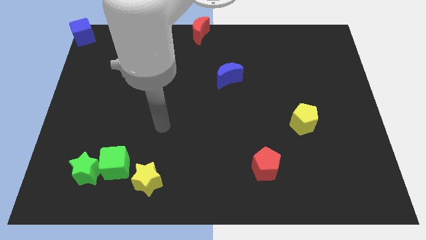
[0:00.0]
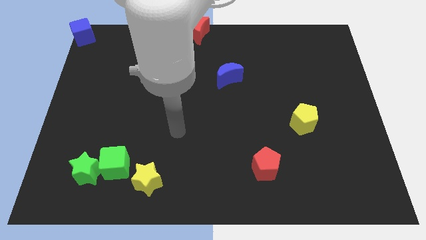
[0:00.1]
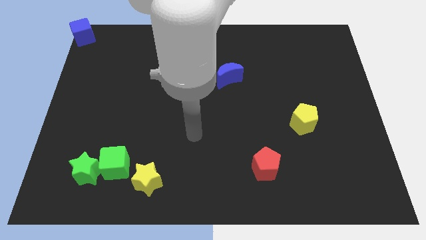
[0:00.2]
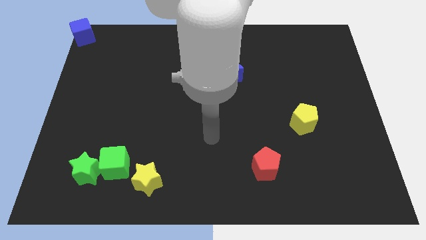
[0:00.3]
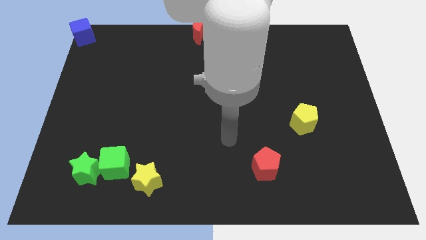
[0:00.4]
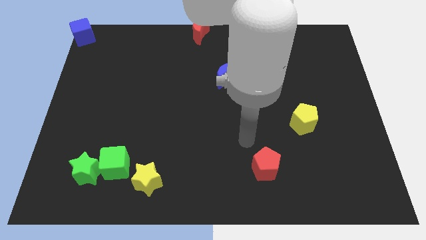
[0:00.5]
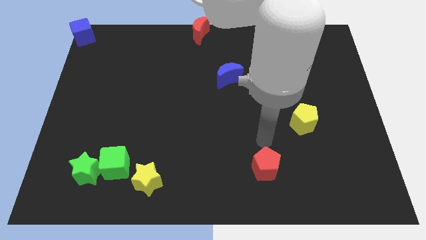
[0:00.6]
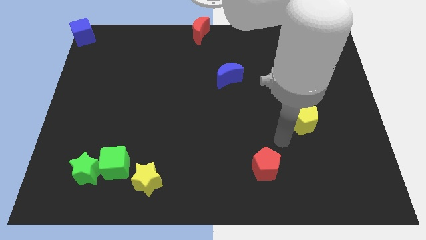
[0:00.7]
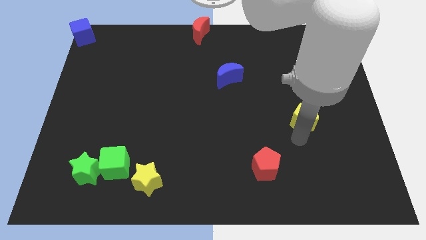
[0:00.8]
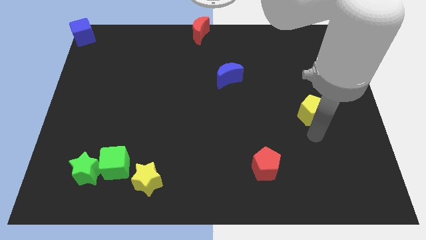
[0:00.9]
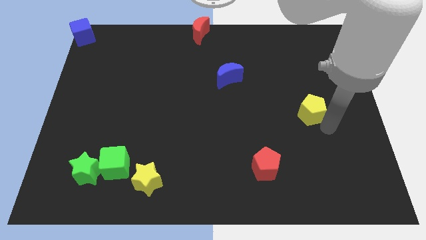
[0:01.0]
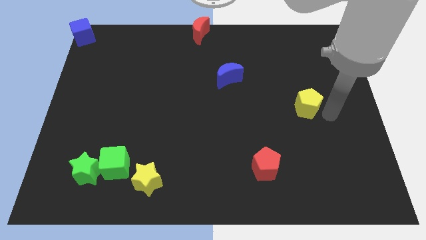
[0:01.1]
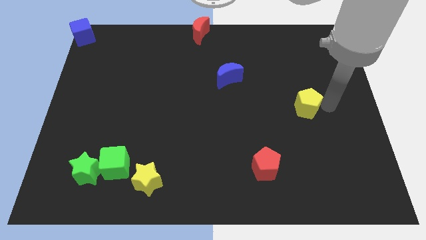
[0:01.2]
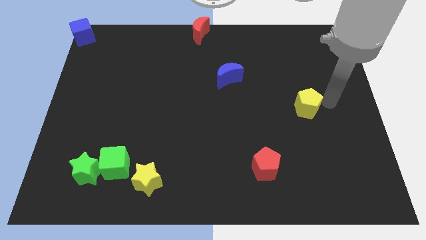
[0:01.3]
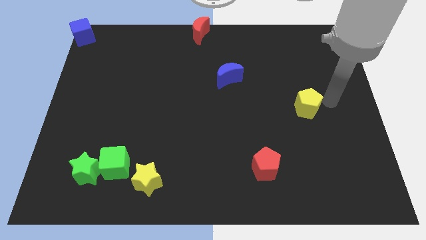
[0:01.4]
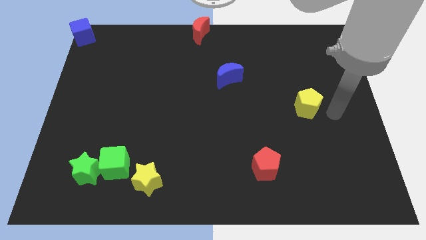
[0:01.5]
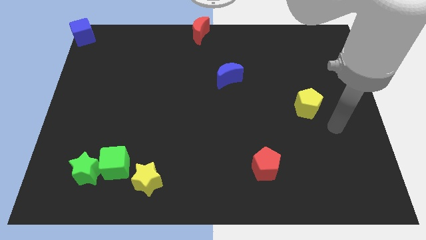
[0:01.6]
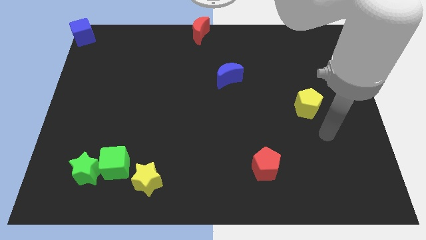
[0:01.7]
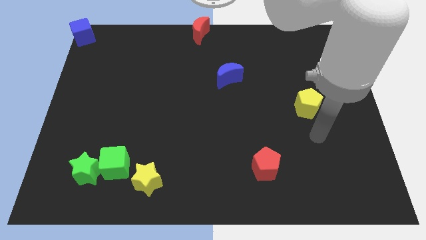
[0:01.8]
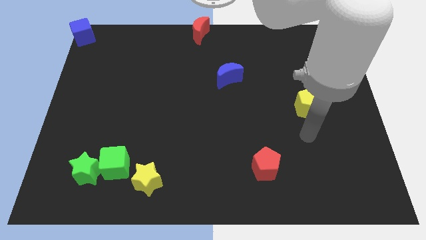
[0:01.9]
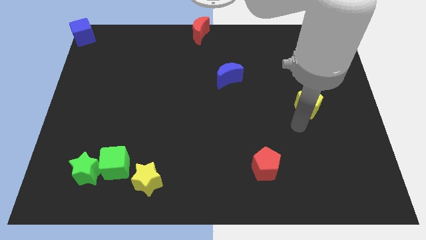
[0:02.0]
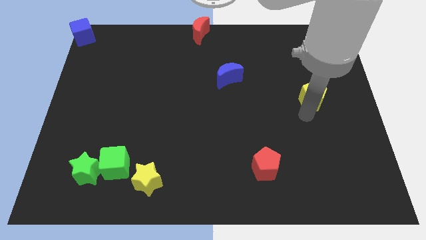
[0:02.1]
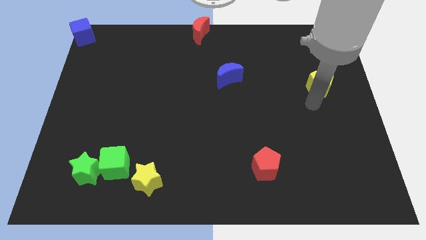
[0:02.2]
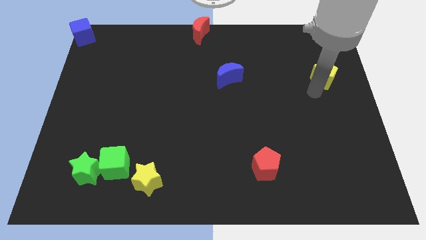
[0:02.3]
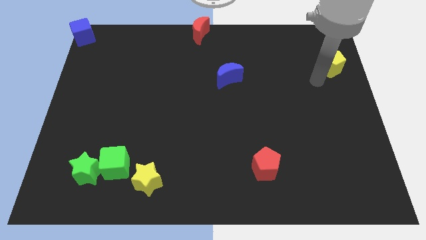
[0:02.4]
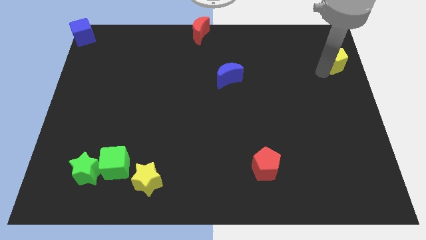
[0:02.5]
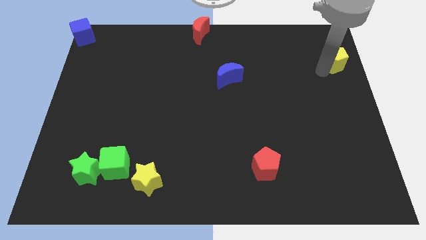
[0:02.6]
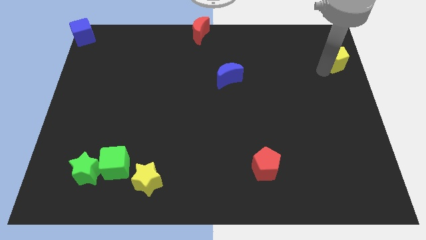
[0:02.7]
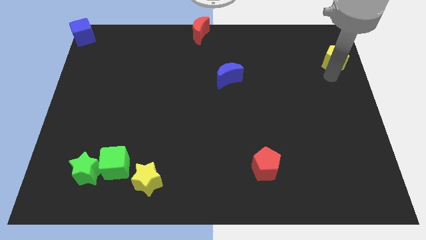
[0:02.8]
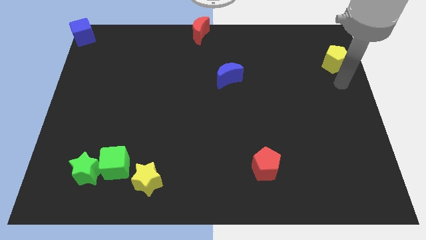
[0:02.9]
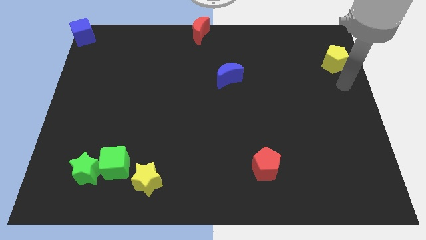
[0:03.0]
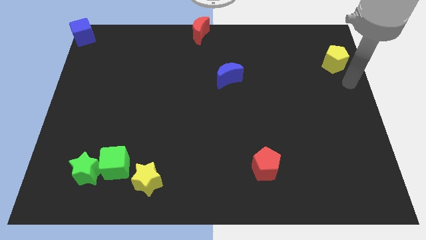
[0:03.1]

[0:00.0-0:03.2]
push the yellow pentagon to the top right

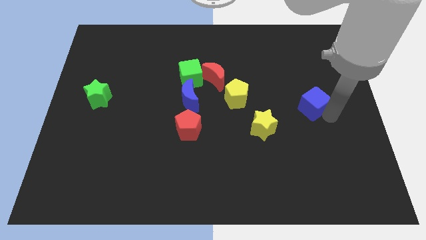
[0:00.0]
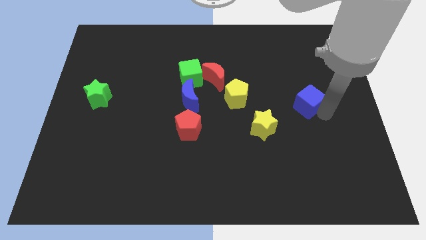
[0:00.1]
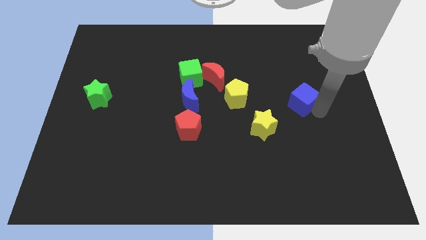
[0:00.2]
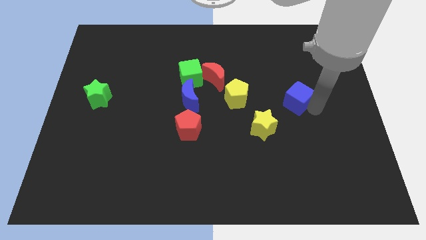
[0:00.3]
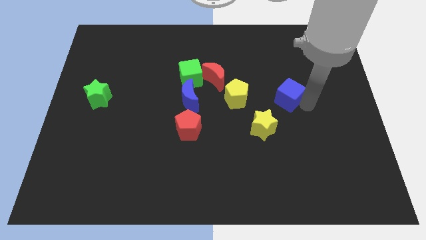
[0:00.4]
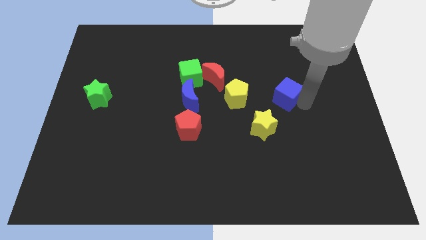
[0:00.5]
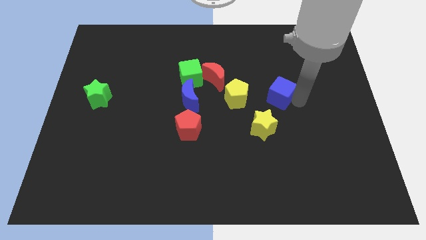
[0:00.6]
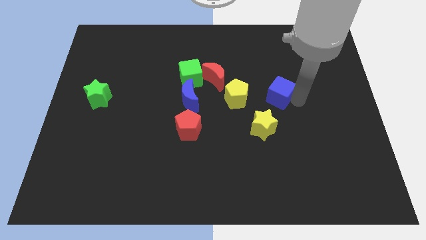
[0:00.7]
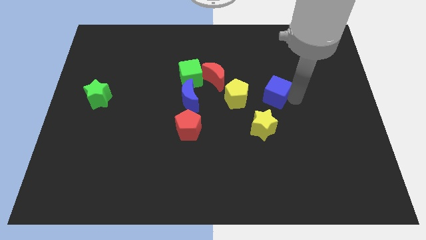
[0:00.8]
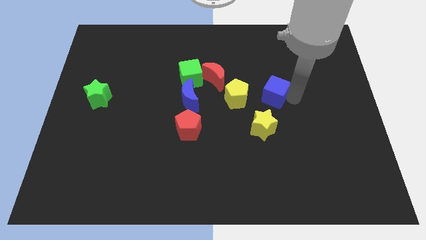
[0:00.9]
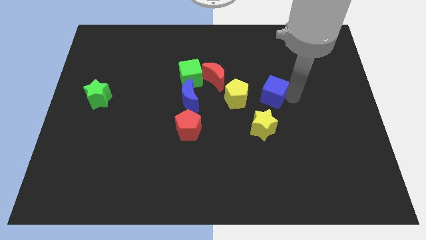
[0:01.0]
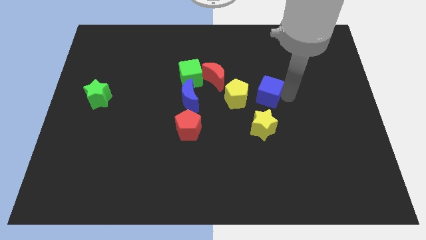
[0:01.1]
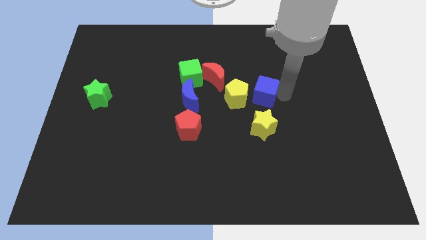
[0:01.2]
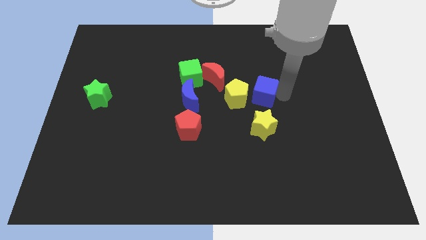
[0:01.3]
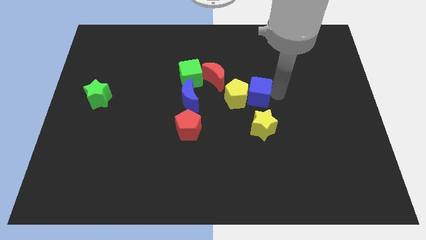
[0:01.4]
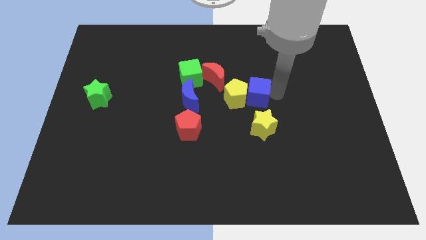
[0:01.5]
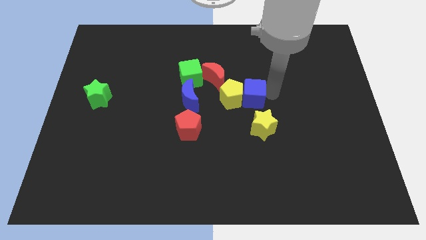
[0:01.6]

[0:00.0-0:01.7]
place blue cube beside the yellow pentagon

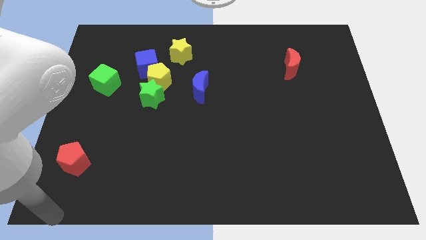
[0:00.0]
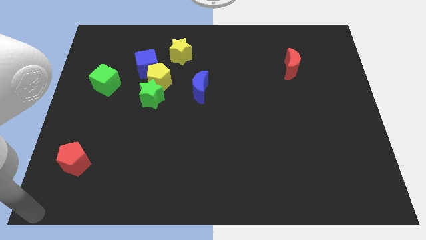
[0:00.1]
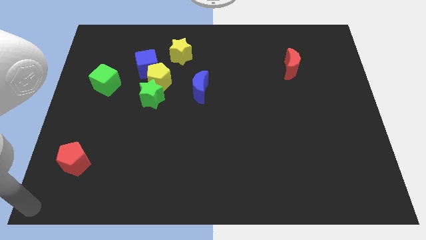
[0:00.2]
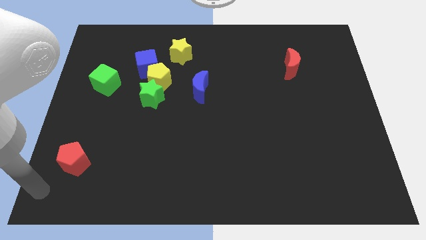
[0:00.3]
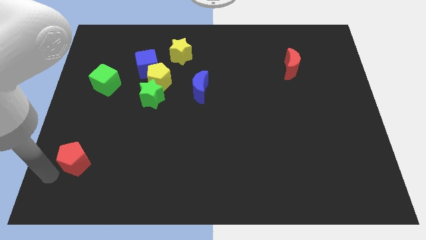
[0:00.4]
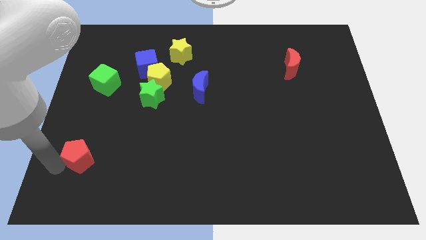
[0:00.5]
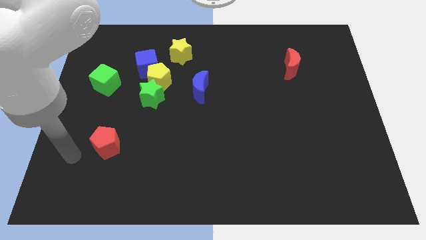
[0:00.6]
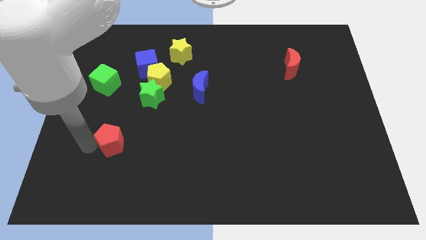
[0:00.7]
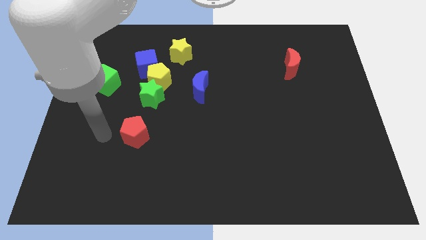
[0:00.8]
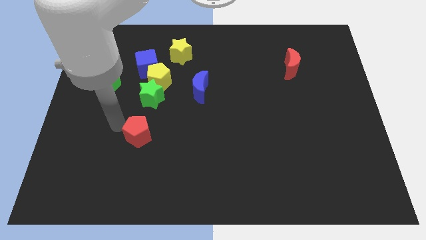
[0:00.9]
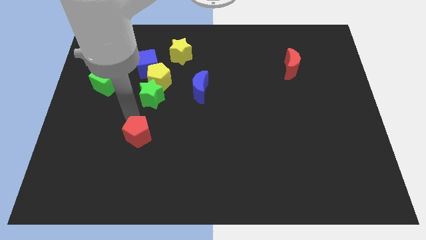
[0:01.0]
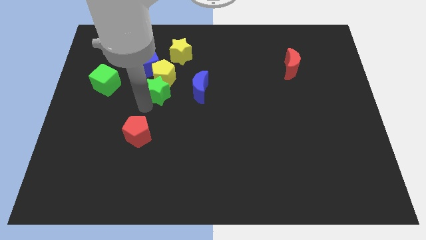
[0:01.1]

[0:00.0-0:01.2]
place the red pentagon below the green star

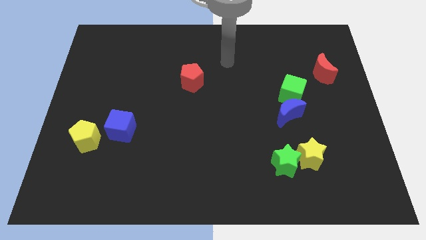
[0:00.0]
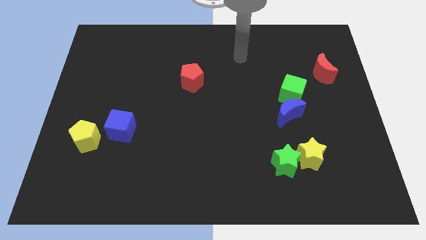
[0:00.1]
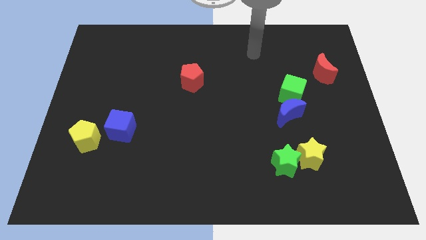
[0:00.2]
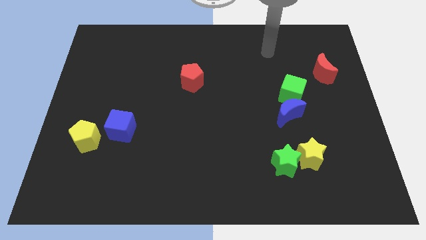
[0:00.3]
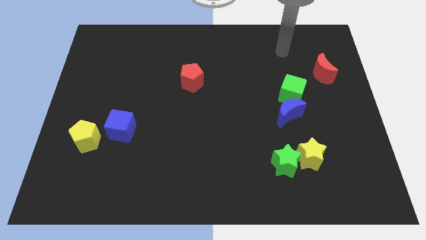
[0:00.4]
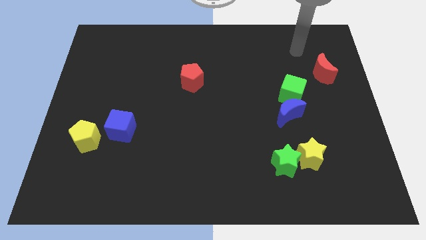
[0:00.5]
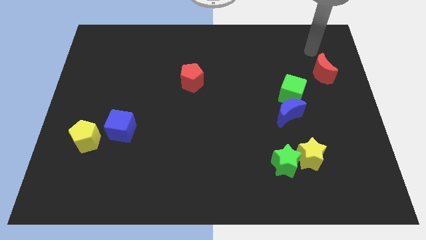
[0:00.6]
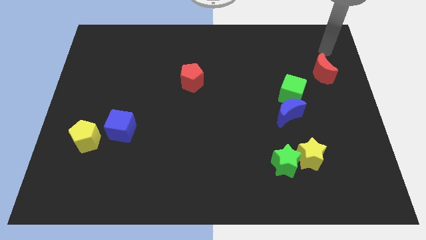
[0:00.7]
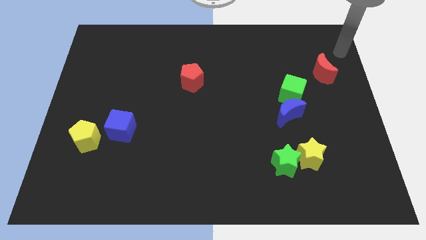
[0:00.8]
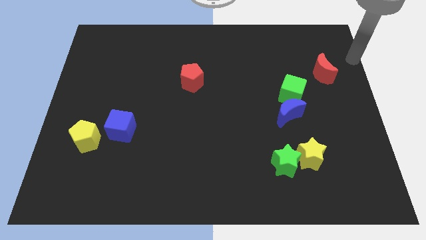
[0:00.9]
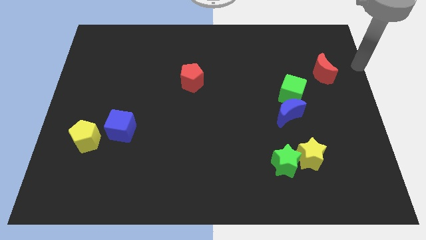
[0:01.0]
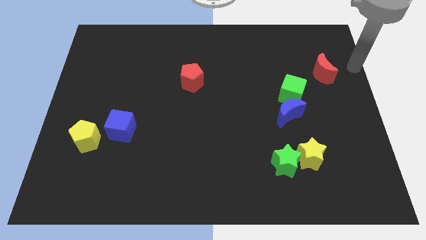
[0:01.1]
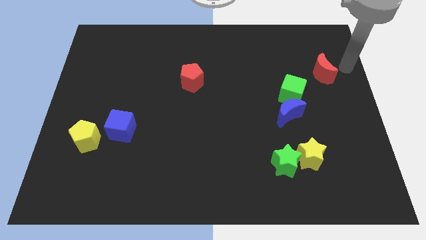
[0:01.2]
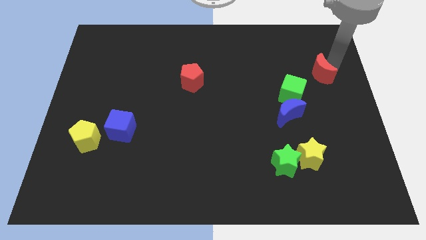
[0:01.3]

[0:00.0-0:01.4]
place your arm to the right side of the red moon

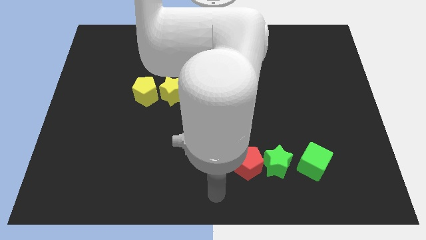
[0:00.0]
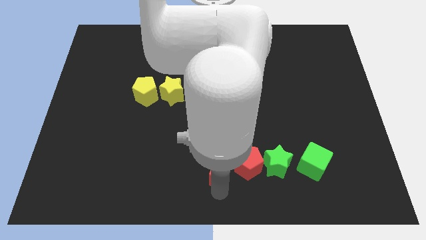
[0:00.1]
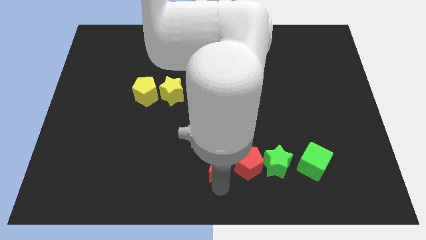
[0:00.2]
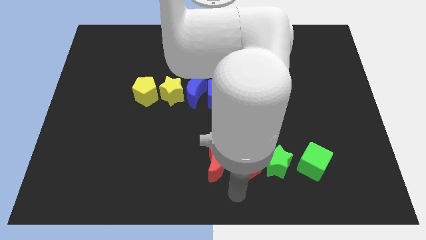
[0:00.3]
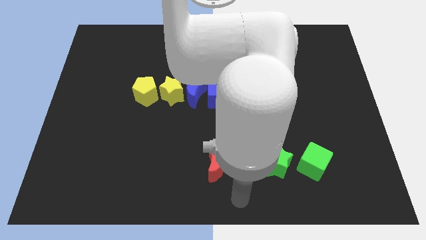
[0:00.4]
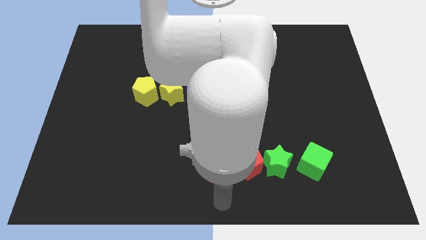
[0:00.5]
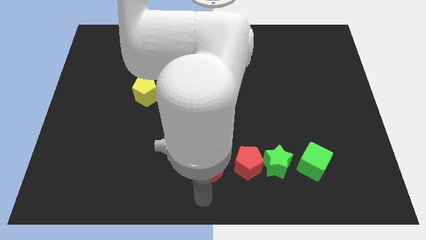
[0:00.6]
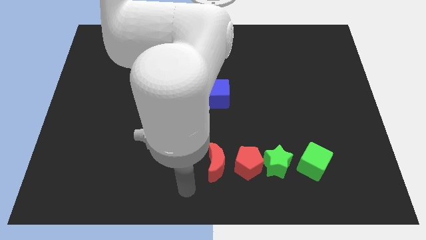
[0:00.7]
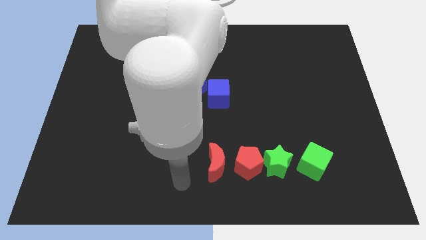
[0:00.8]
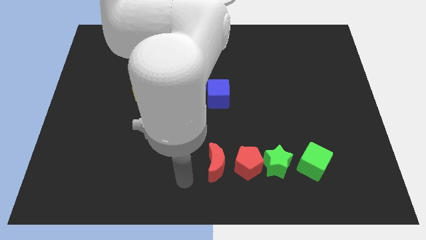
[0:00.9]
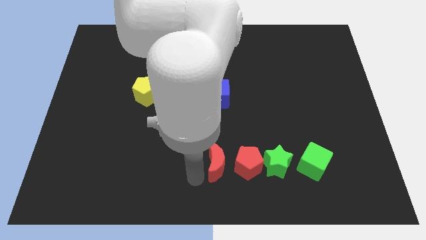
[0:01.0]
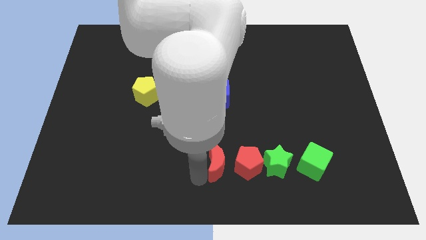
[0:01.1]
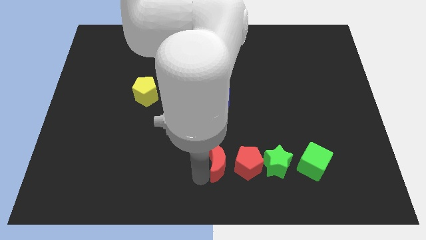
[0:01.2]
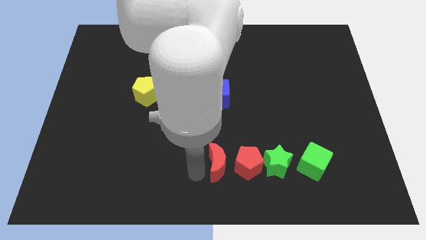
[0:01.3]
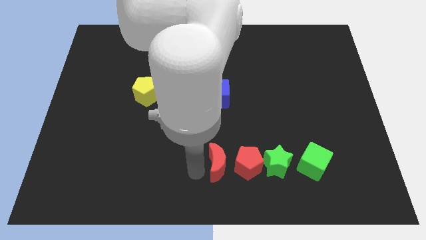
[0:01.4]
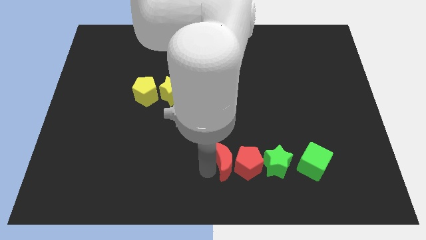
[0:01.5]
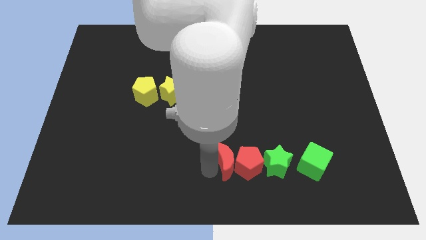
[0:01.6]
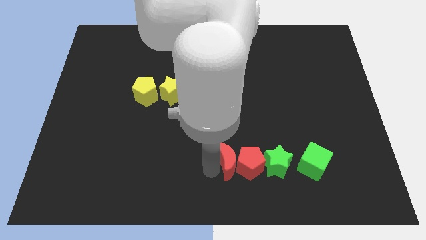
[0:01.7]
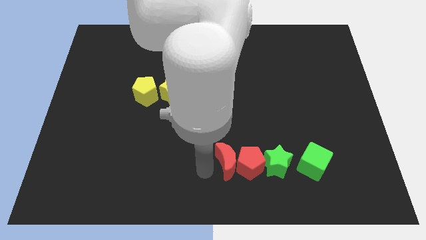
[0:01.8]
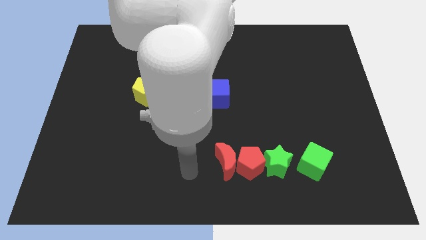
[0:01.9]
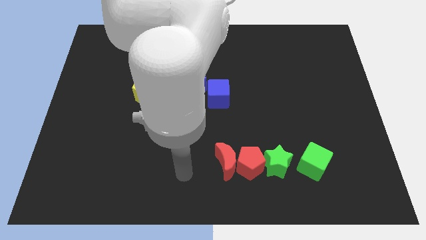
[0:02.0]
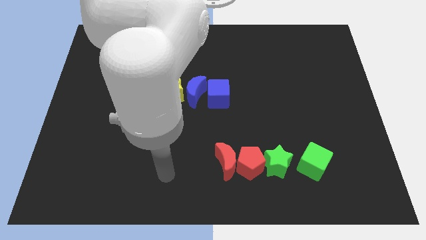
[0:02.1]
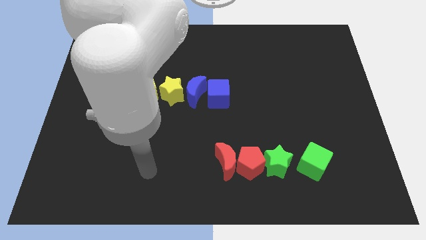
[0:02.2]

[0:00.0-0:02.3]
push red crescent into the red pentagon
